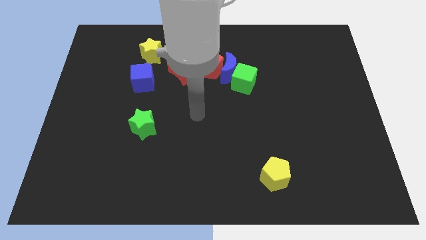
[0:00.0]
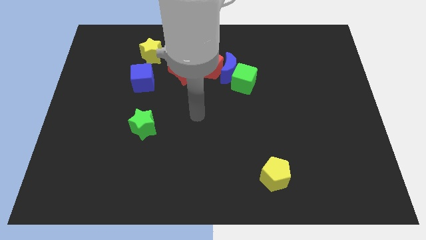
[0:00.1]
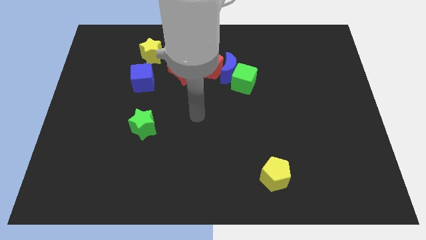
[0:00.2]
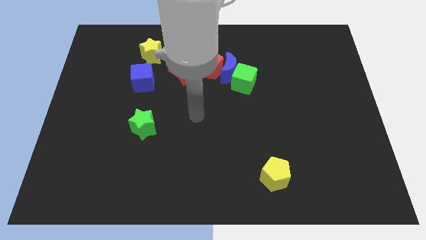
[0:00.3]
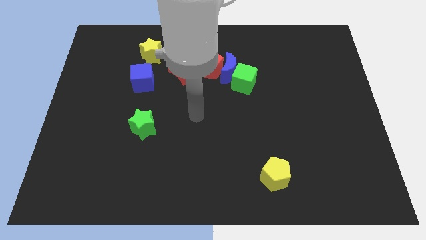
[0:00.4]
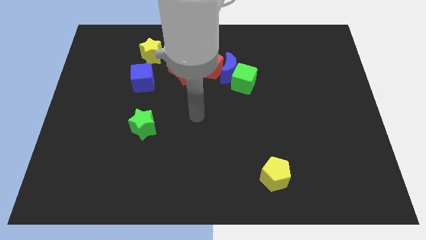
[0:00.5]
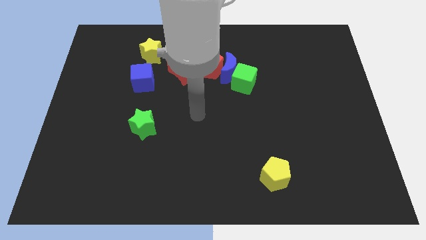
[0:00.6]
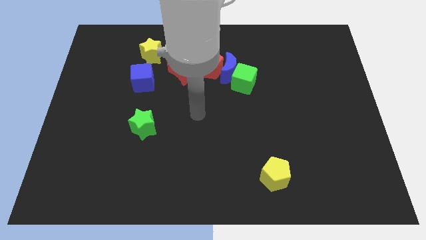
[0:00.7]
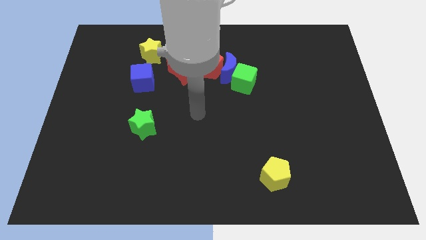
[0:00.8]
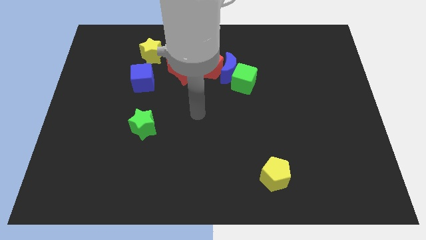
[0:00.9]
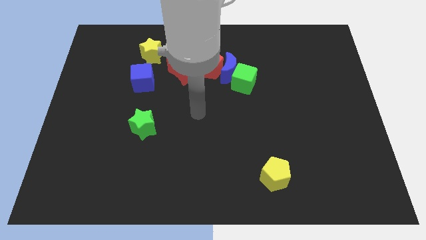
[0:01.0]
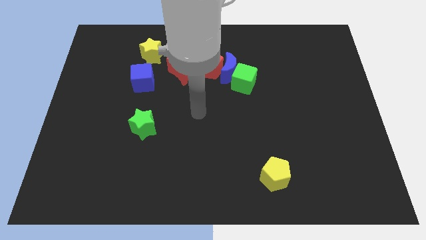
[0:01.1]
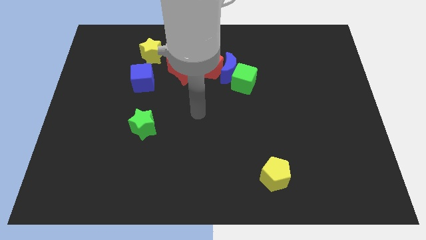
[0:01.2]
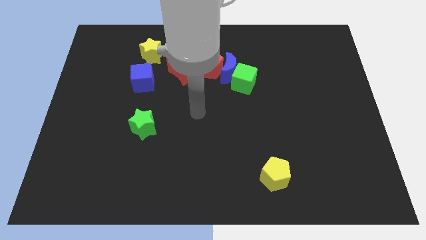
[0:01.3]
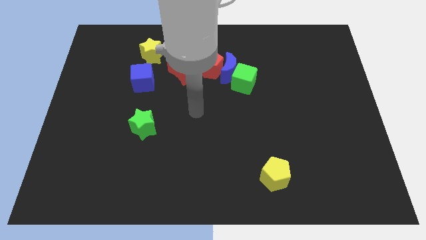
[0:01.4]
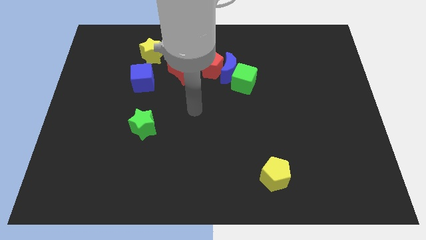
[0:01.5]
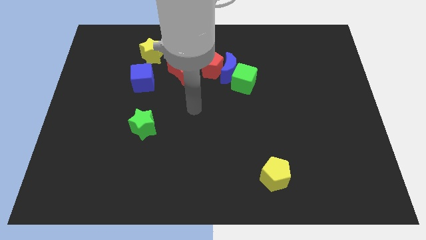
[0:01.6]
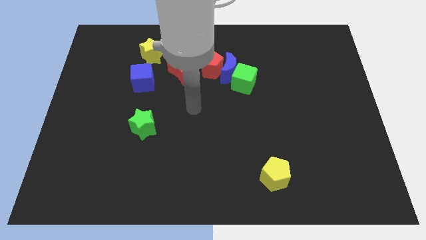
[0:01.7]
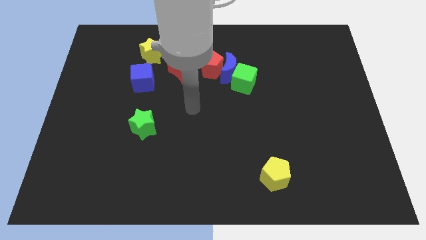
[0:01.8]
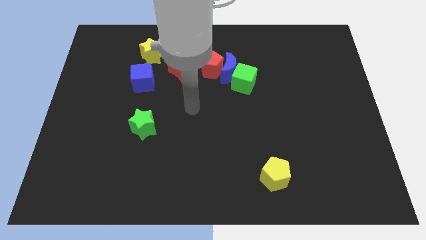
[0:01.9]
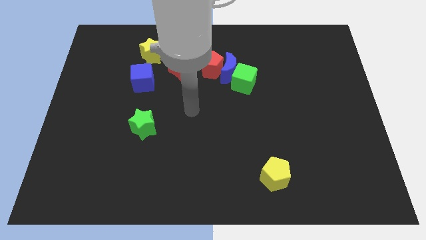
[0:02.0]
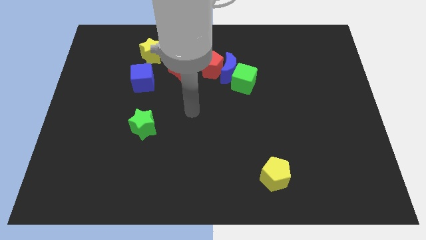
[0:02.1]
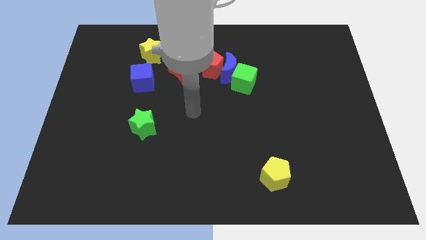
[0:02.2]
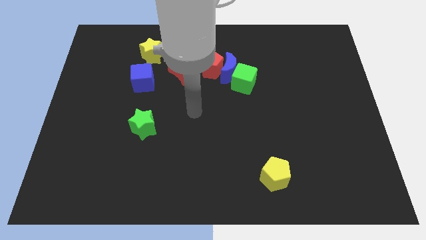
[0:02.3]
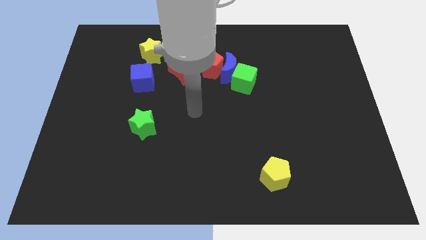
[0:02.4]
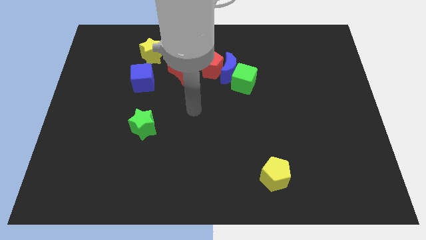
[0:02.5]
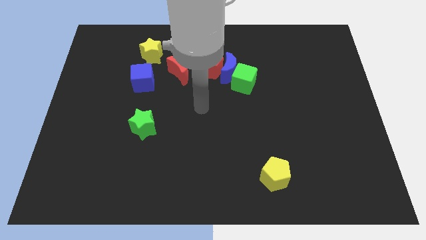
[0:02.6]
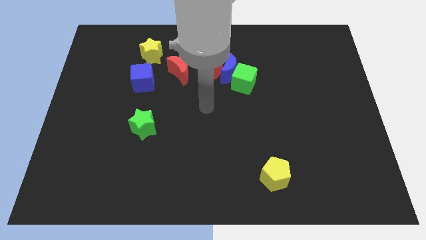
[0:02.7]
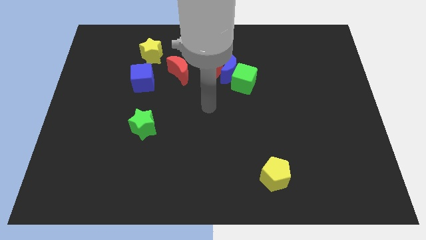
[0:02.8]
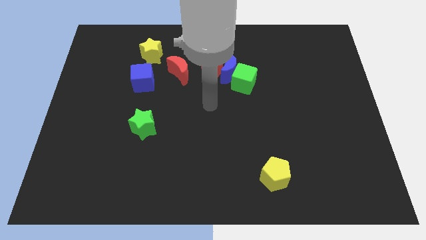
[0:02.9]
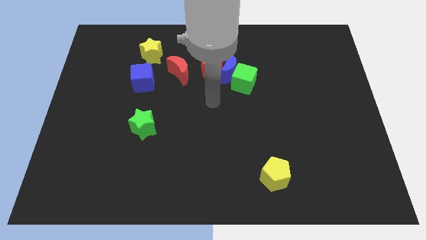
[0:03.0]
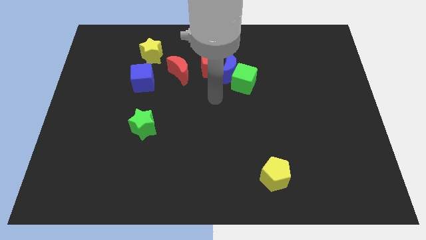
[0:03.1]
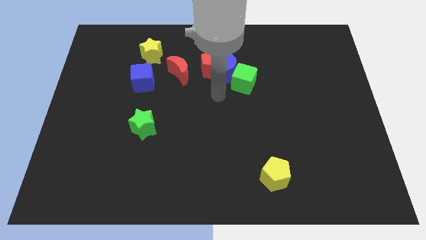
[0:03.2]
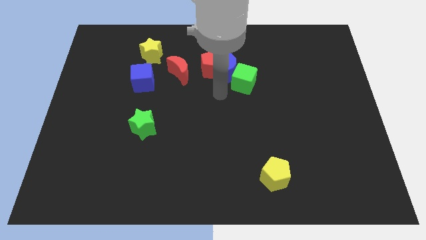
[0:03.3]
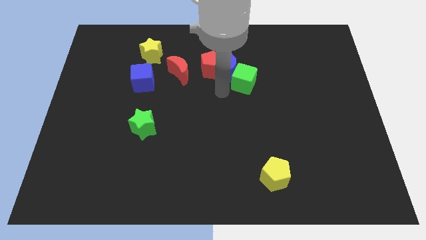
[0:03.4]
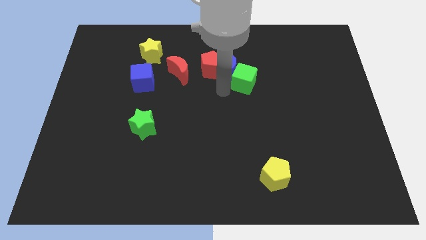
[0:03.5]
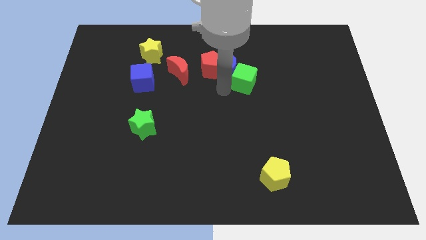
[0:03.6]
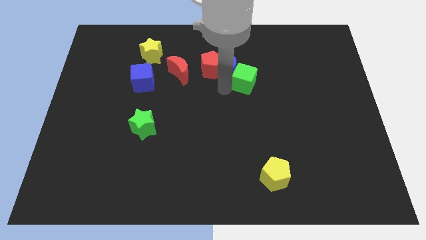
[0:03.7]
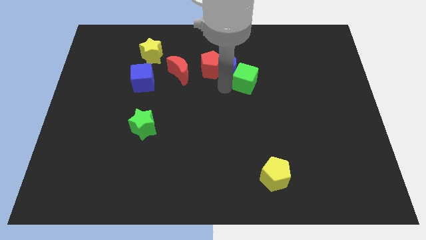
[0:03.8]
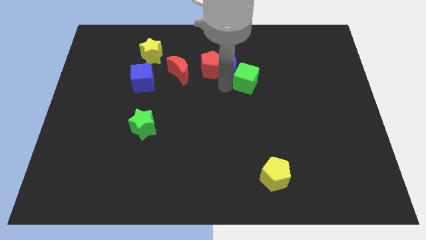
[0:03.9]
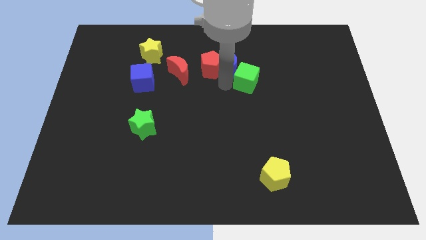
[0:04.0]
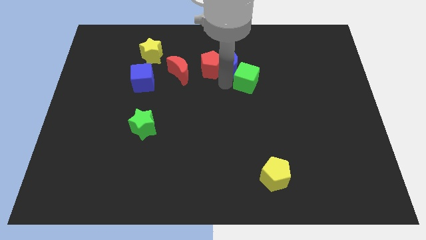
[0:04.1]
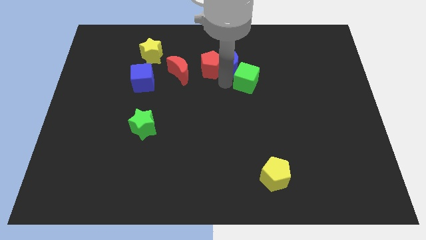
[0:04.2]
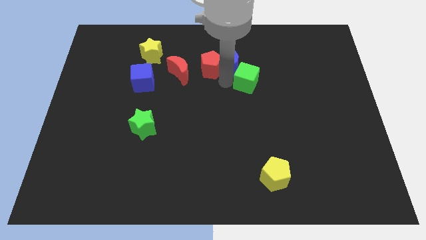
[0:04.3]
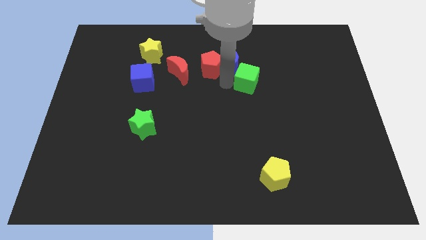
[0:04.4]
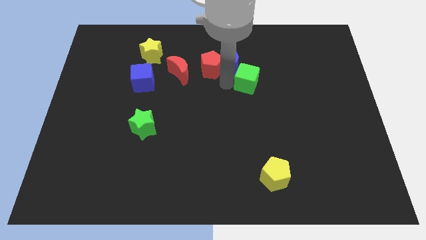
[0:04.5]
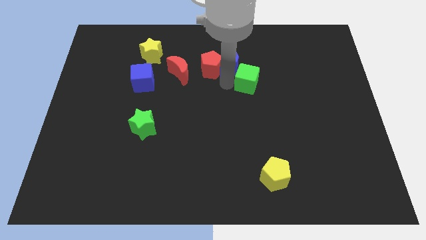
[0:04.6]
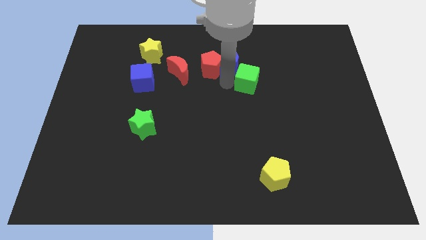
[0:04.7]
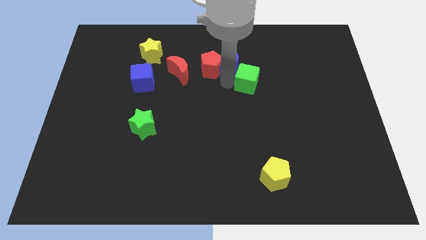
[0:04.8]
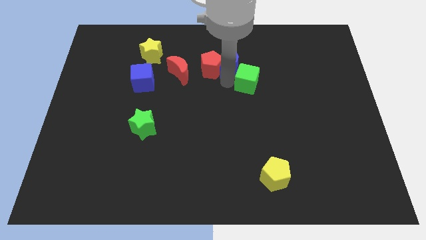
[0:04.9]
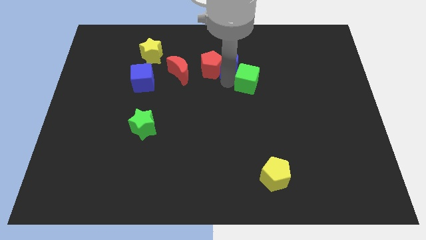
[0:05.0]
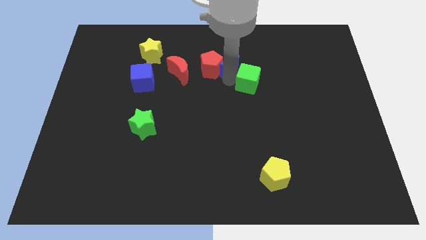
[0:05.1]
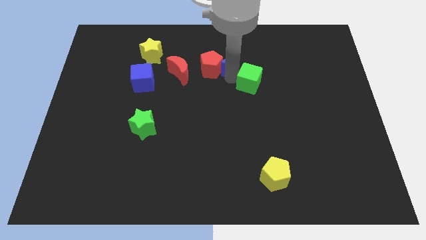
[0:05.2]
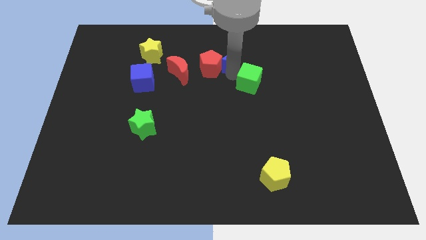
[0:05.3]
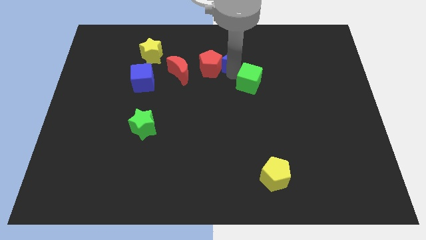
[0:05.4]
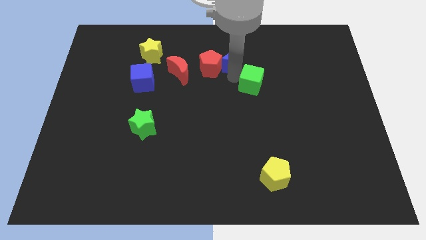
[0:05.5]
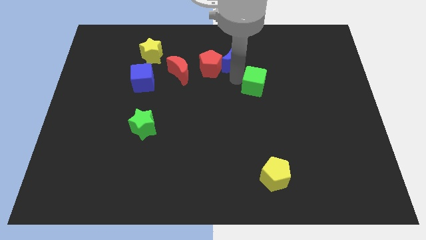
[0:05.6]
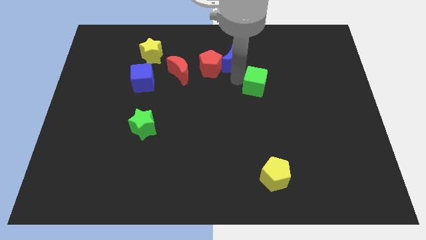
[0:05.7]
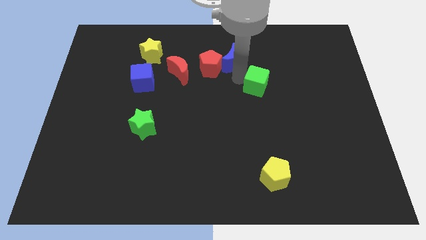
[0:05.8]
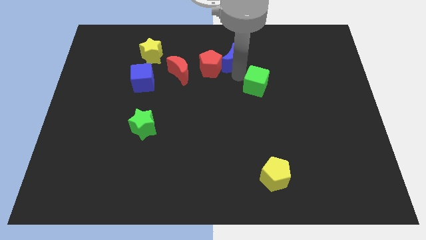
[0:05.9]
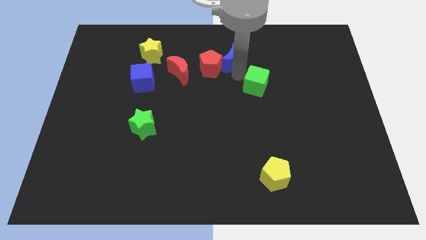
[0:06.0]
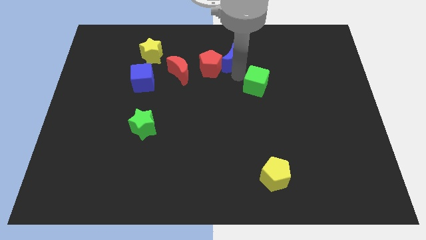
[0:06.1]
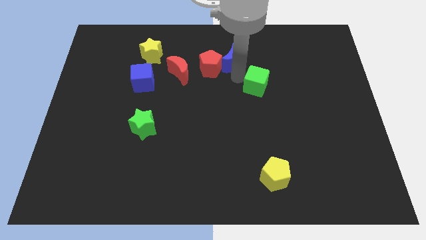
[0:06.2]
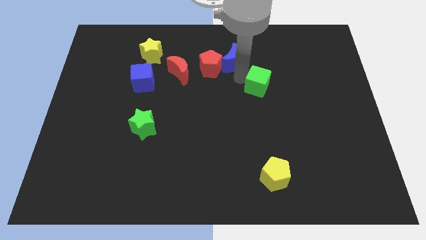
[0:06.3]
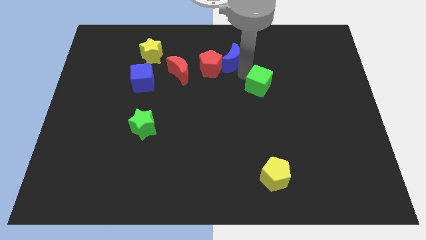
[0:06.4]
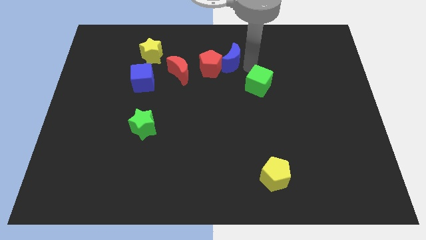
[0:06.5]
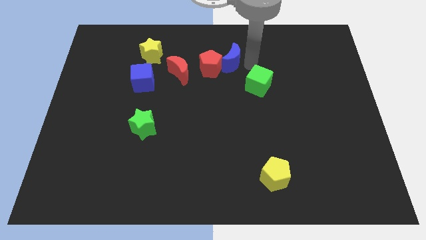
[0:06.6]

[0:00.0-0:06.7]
separate the blue moon and green cube

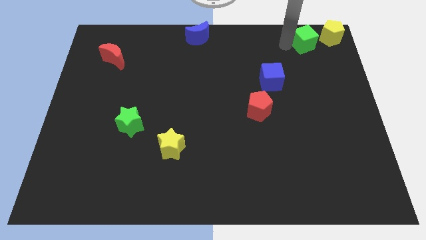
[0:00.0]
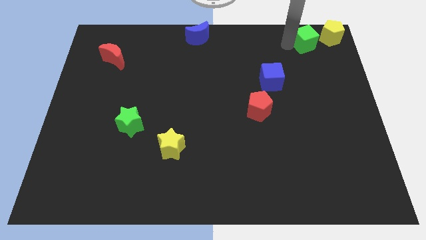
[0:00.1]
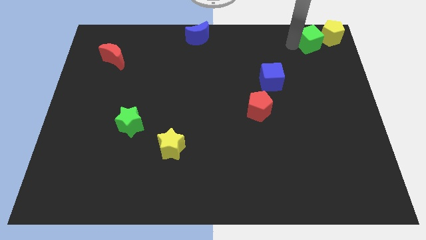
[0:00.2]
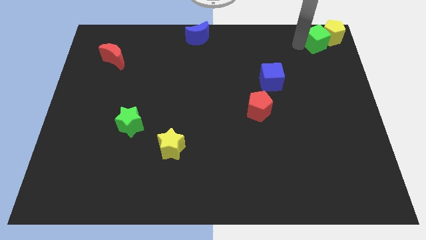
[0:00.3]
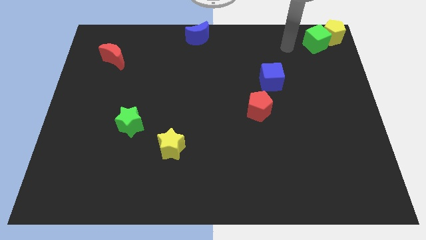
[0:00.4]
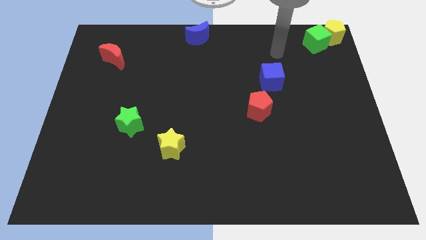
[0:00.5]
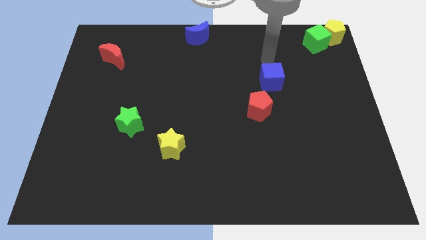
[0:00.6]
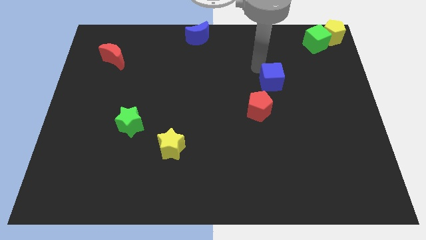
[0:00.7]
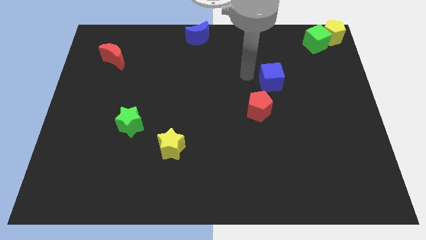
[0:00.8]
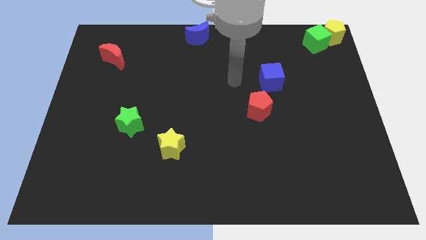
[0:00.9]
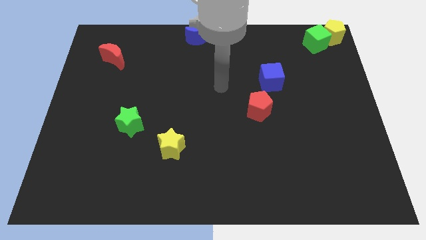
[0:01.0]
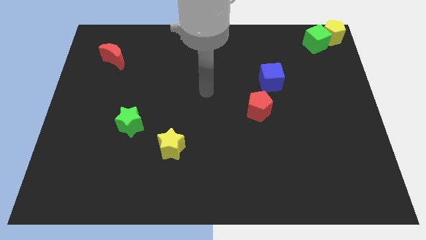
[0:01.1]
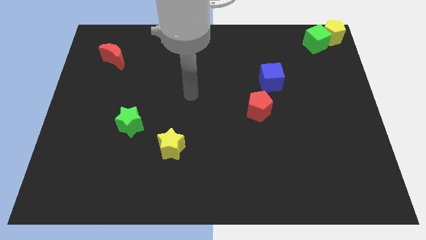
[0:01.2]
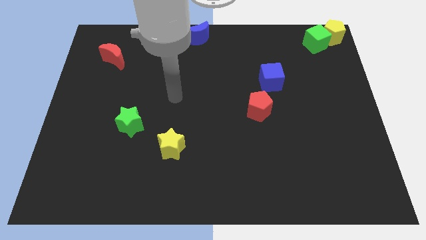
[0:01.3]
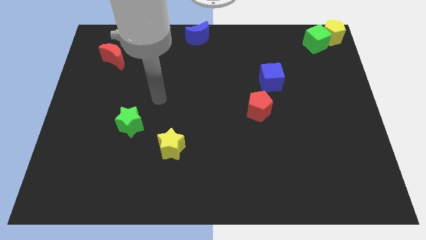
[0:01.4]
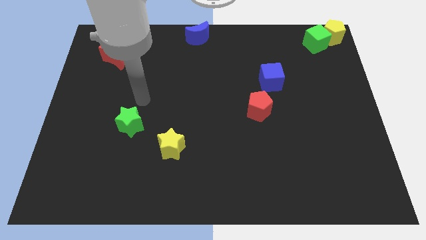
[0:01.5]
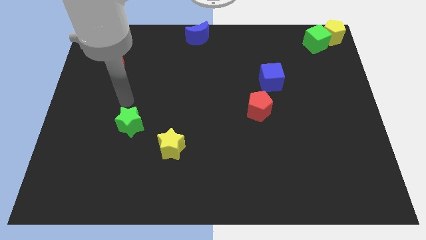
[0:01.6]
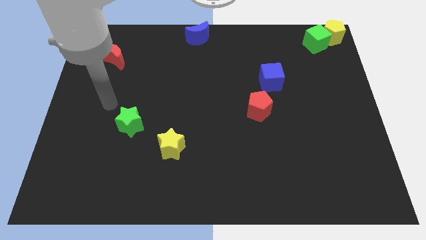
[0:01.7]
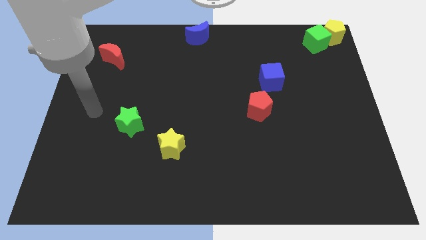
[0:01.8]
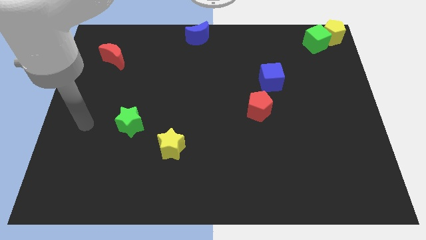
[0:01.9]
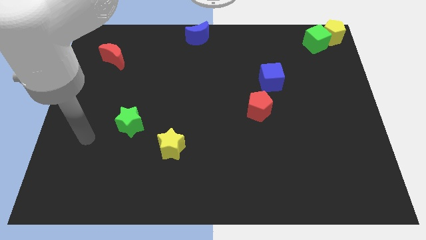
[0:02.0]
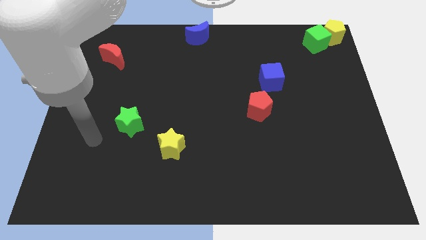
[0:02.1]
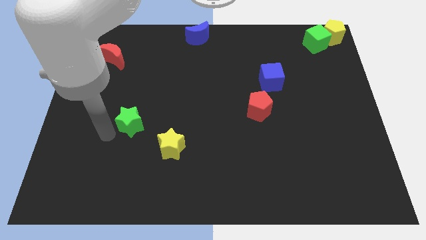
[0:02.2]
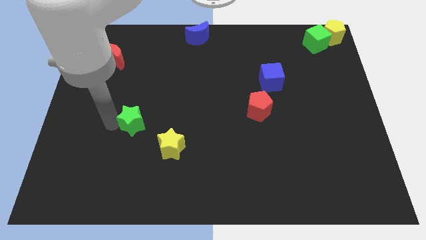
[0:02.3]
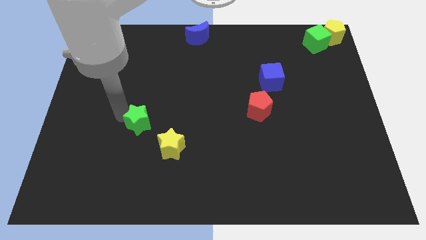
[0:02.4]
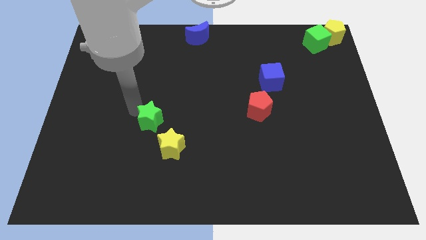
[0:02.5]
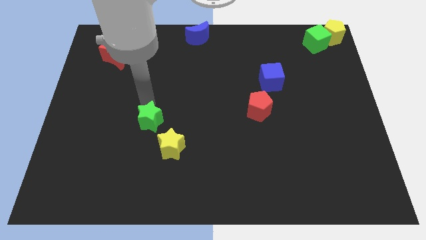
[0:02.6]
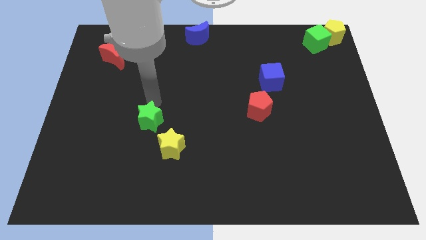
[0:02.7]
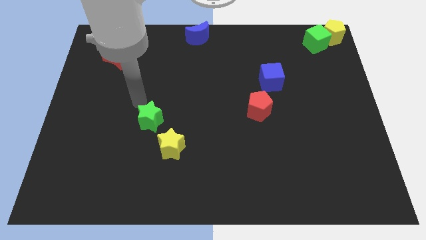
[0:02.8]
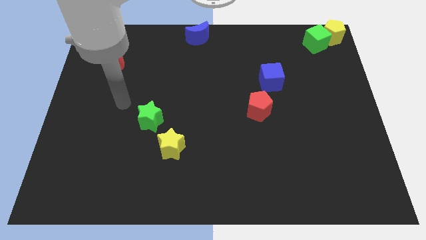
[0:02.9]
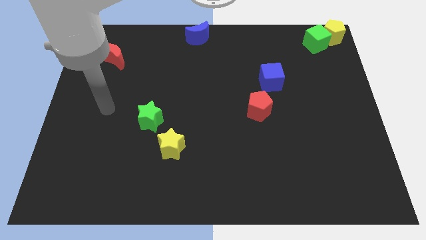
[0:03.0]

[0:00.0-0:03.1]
slightly move the green star to the right side of the board
